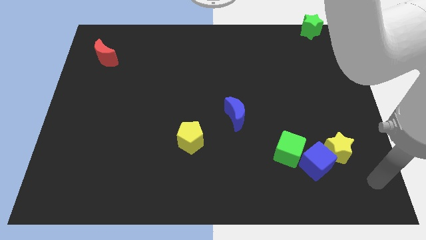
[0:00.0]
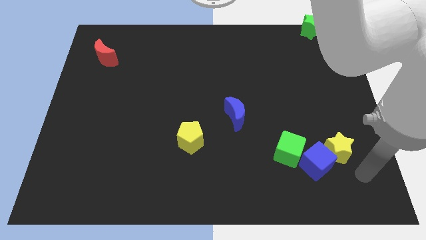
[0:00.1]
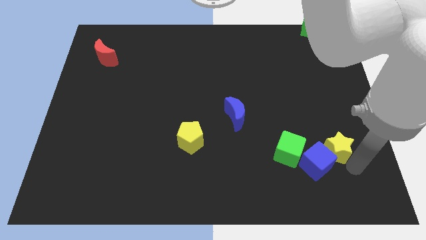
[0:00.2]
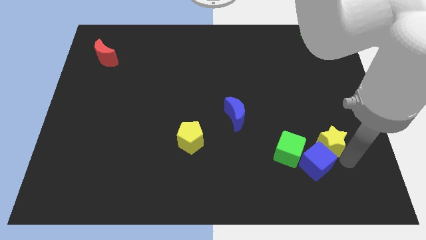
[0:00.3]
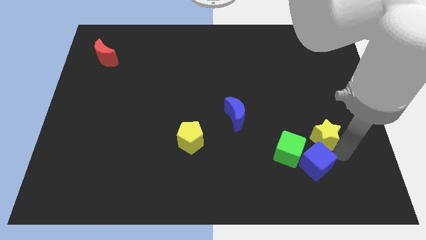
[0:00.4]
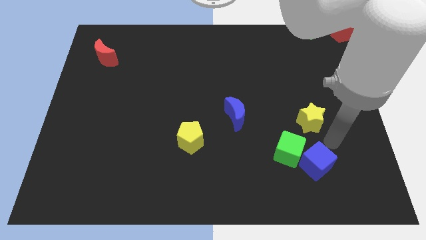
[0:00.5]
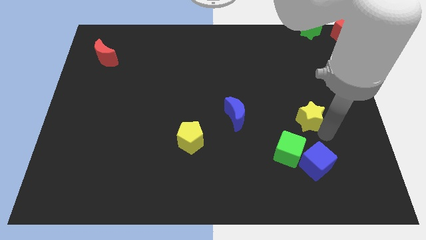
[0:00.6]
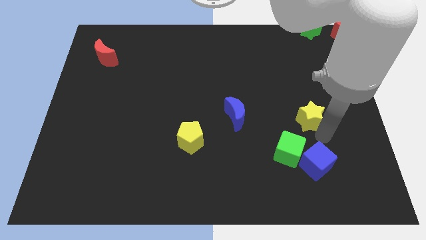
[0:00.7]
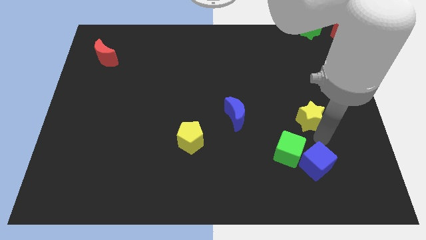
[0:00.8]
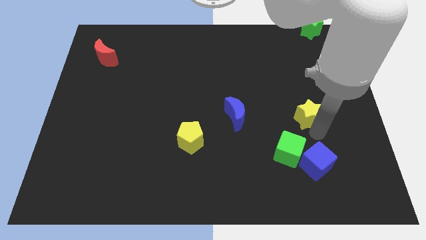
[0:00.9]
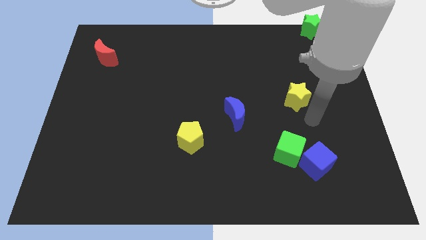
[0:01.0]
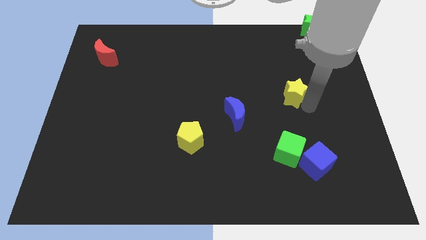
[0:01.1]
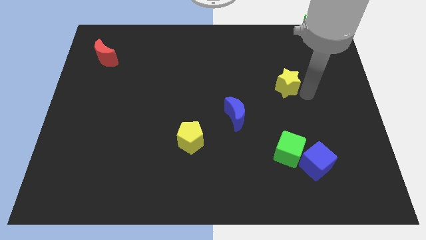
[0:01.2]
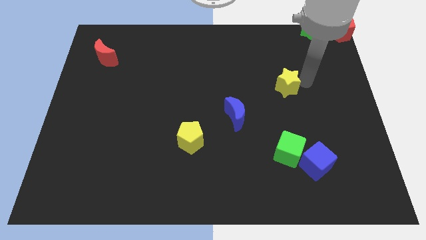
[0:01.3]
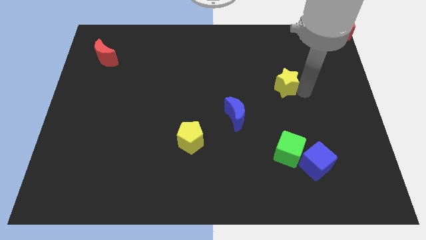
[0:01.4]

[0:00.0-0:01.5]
push yellow star to top right of the blue crescent

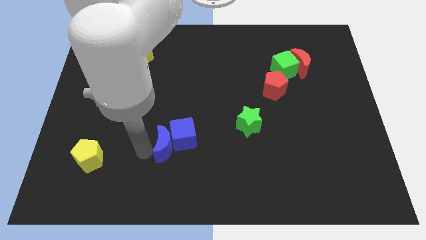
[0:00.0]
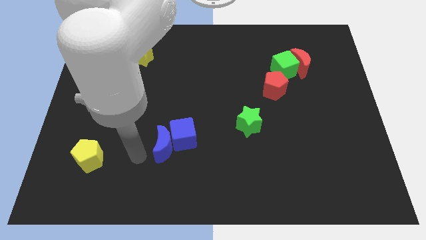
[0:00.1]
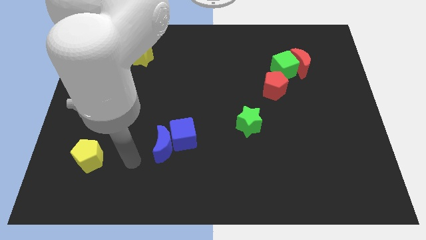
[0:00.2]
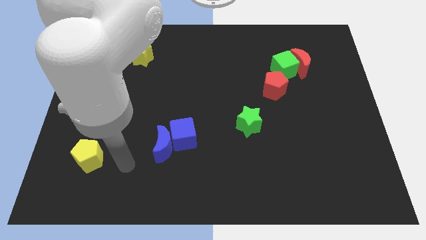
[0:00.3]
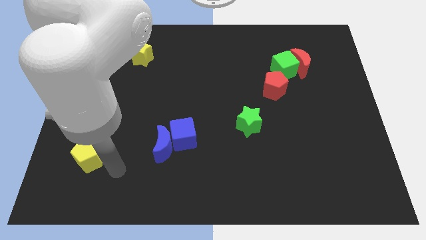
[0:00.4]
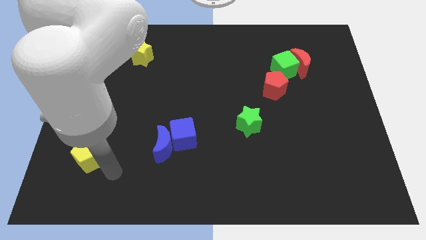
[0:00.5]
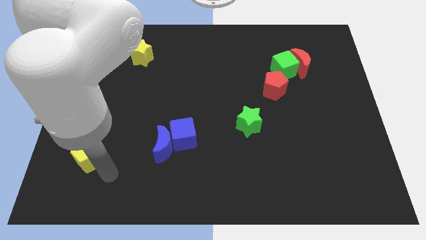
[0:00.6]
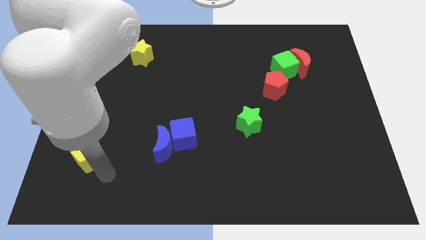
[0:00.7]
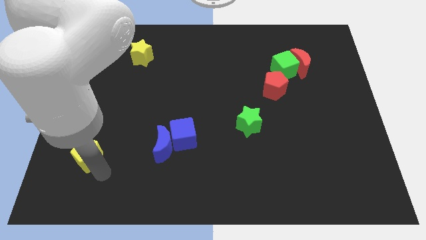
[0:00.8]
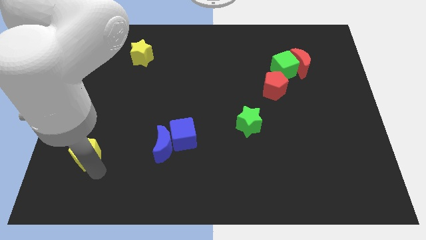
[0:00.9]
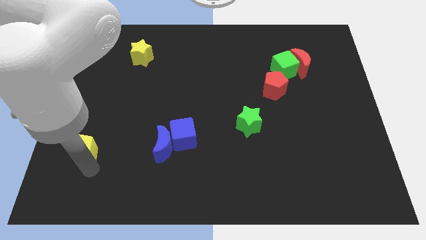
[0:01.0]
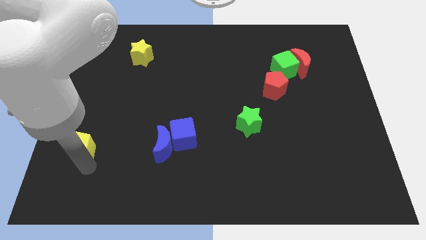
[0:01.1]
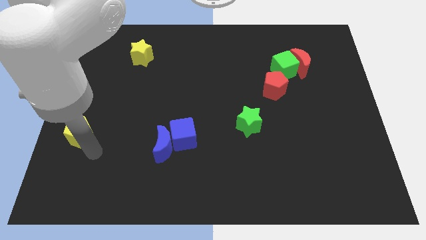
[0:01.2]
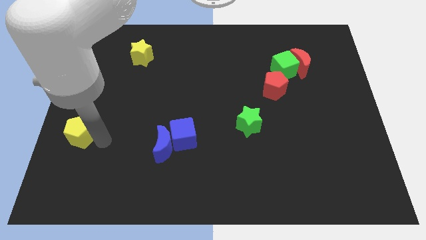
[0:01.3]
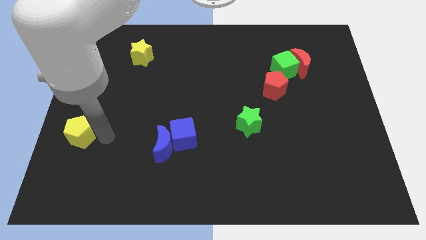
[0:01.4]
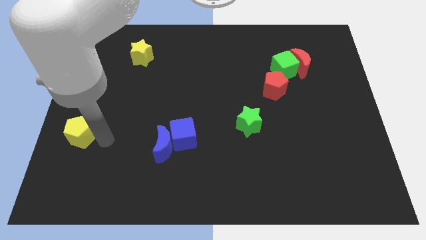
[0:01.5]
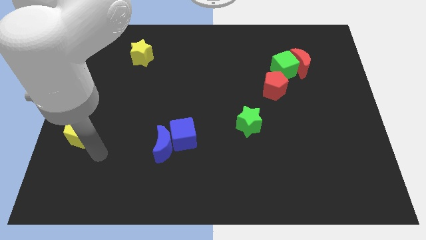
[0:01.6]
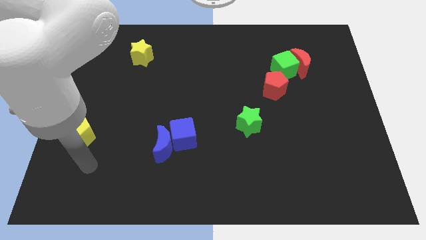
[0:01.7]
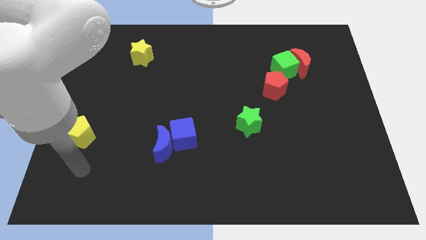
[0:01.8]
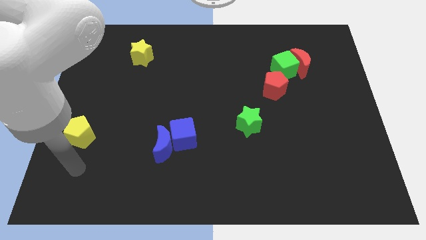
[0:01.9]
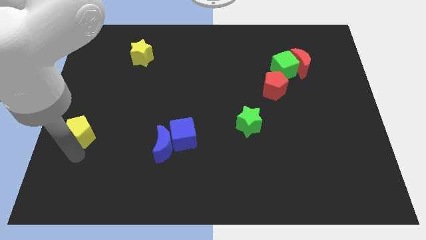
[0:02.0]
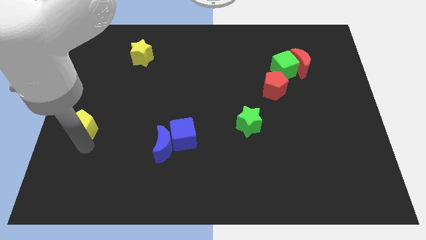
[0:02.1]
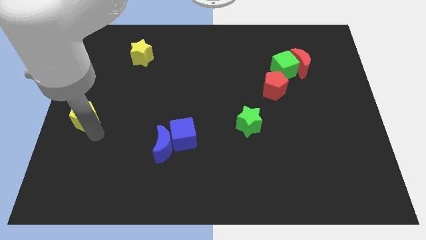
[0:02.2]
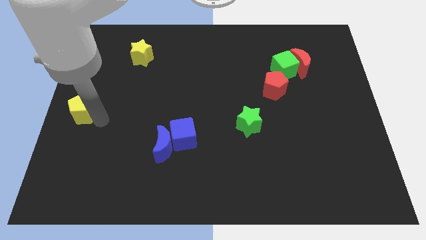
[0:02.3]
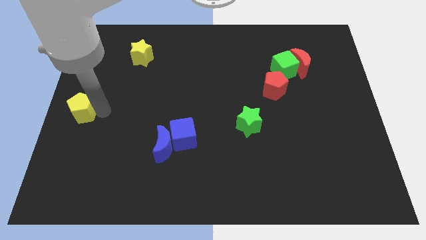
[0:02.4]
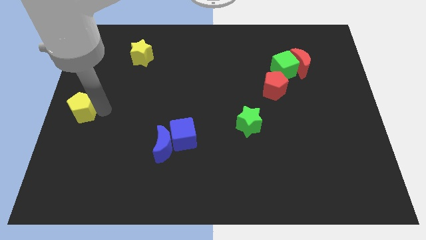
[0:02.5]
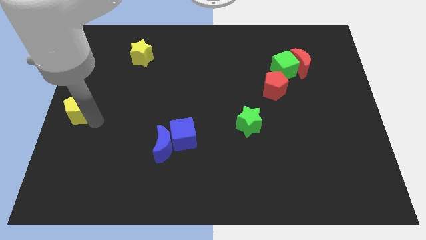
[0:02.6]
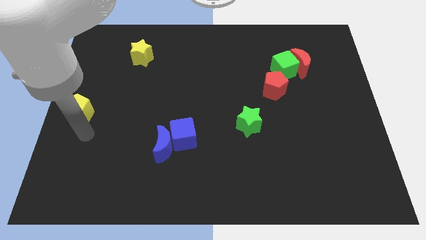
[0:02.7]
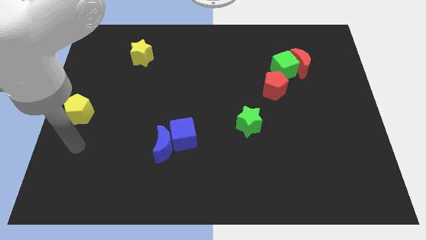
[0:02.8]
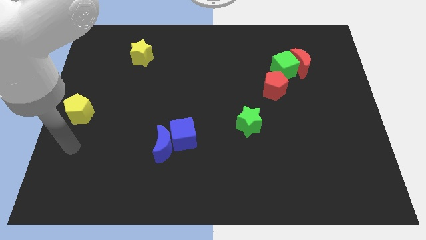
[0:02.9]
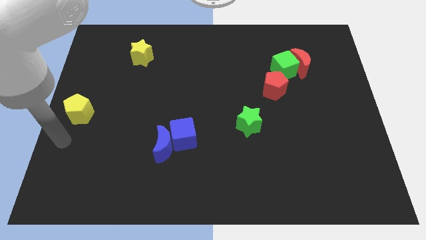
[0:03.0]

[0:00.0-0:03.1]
move the yellow pentagon towards the center left side of the board

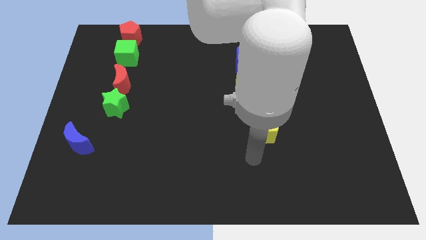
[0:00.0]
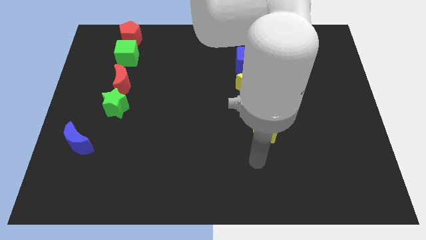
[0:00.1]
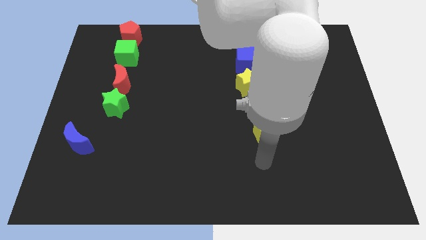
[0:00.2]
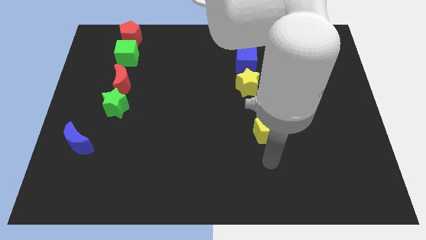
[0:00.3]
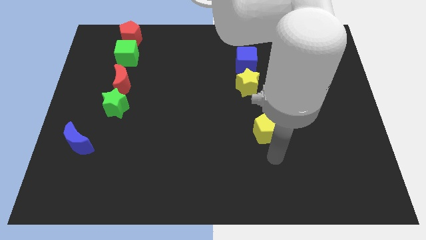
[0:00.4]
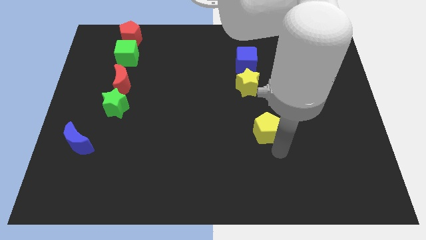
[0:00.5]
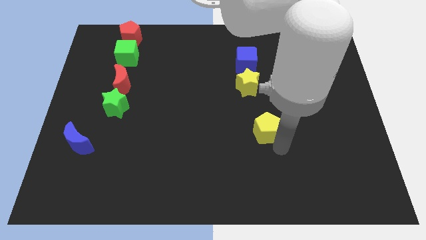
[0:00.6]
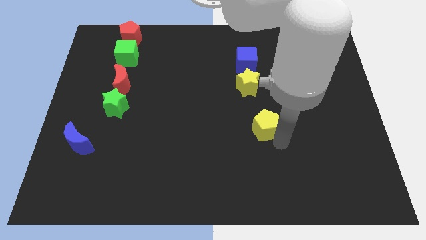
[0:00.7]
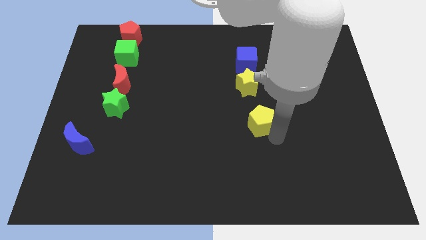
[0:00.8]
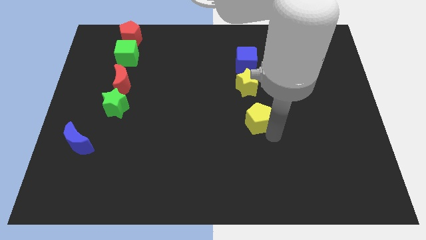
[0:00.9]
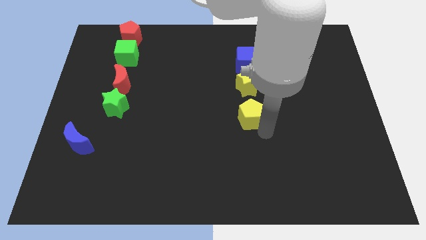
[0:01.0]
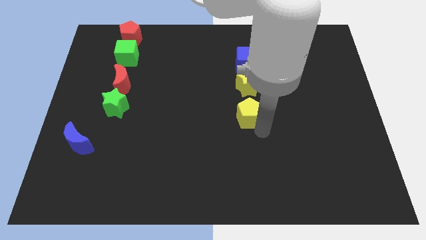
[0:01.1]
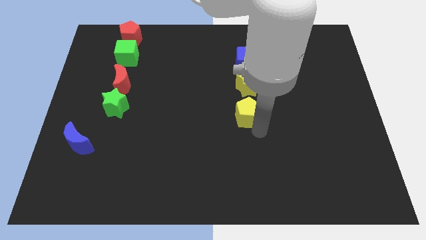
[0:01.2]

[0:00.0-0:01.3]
move the yellow pentagon below the yellow star

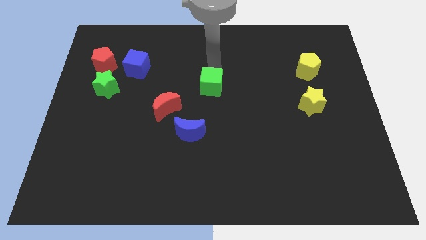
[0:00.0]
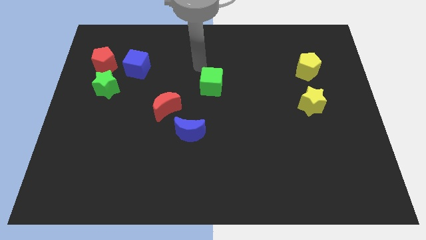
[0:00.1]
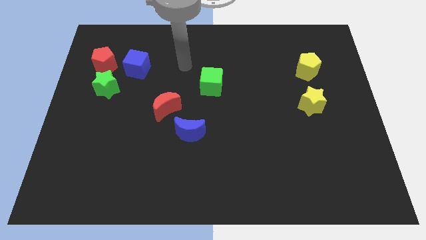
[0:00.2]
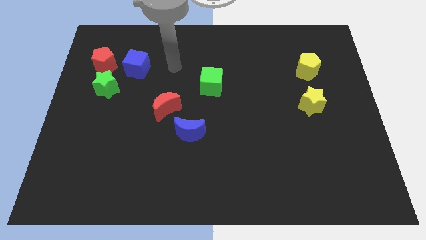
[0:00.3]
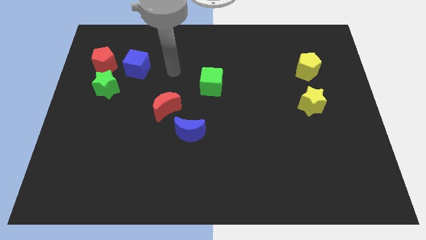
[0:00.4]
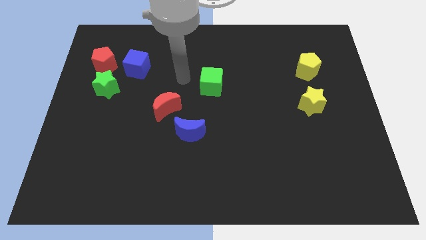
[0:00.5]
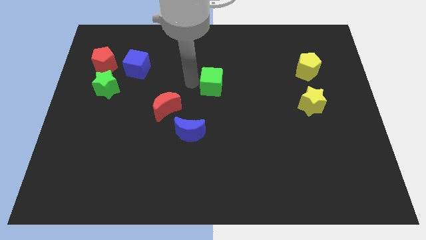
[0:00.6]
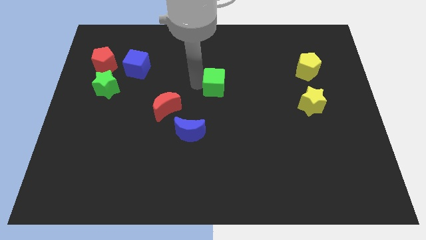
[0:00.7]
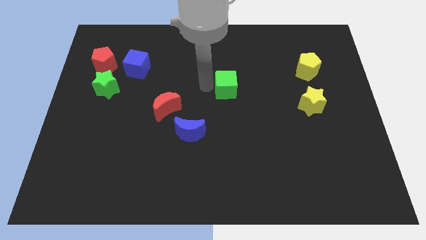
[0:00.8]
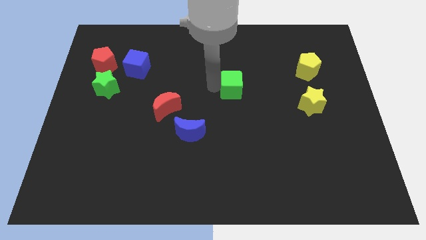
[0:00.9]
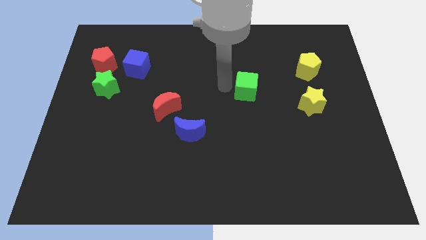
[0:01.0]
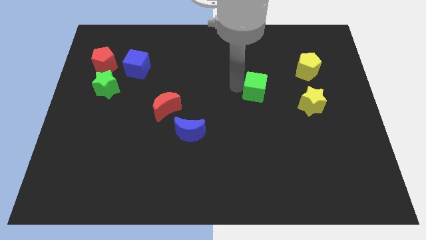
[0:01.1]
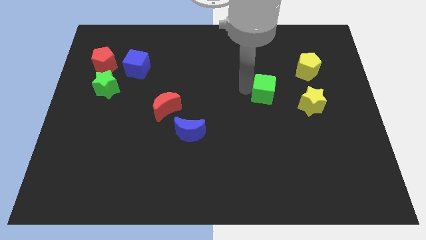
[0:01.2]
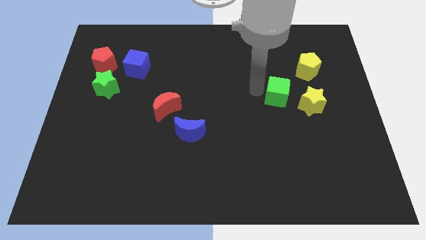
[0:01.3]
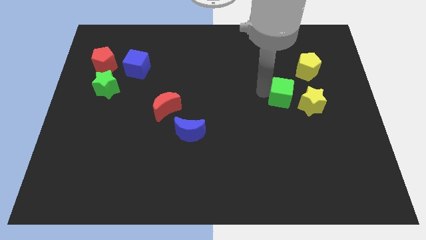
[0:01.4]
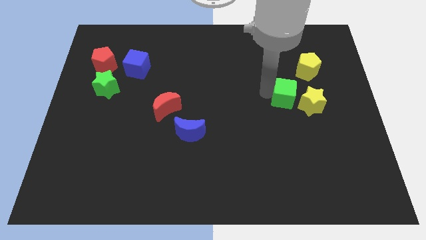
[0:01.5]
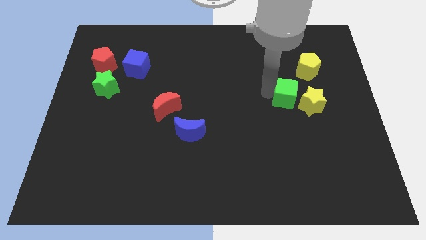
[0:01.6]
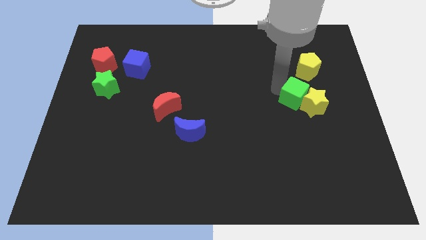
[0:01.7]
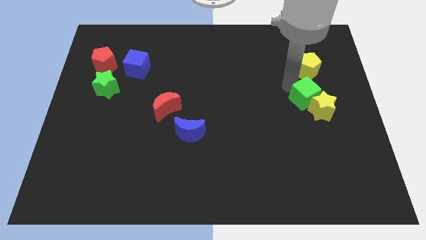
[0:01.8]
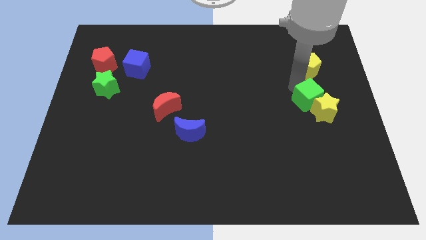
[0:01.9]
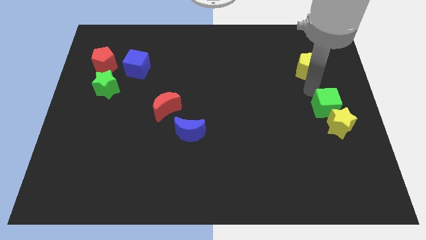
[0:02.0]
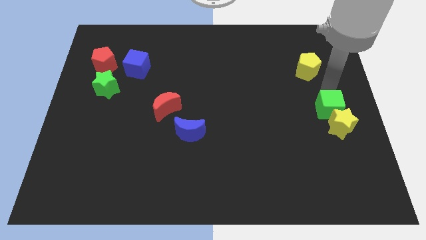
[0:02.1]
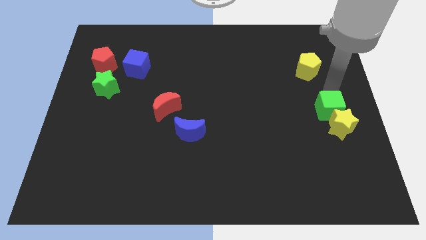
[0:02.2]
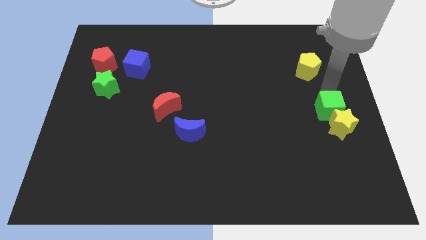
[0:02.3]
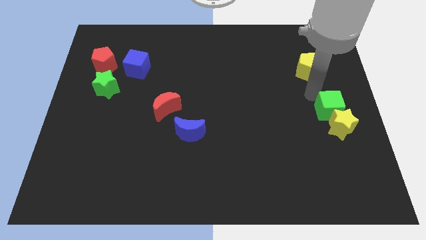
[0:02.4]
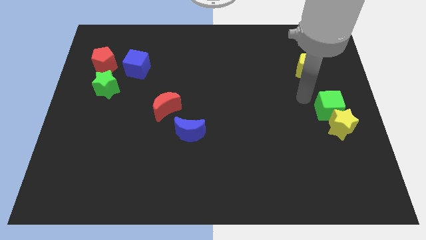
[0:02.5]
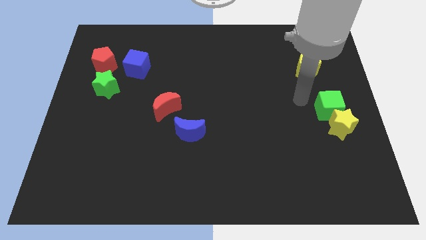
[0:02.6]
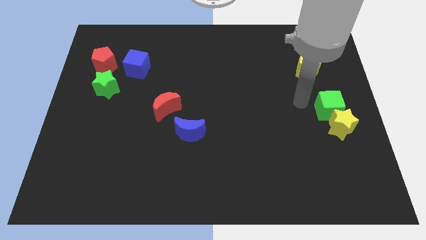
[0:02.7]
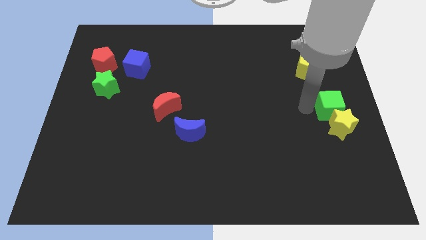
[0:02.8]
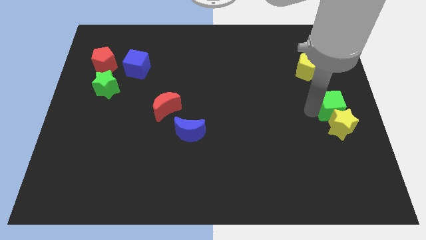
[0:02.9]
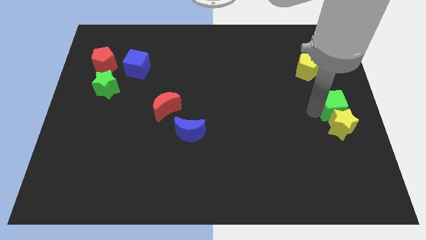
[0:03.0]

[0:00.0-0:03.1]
bring the green cube at the top side of the yellow star
